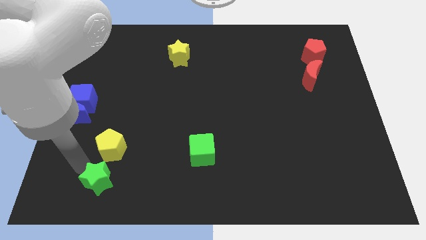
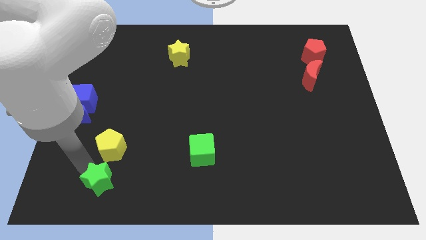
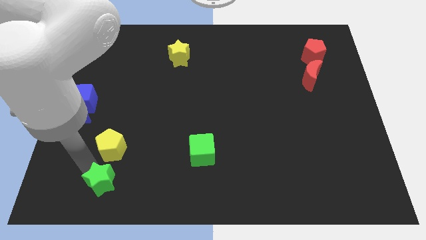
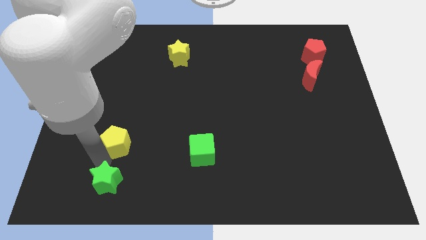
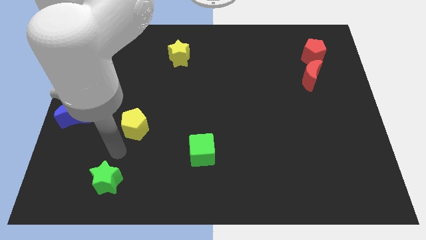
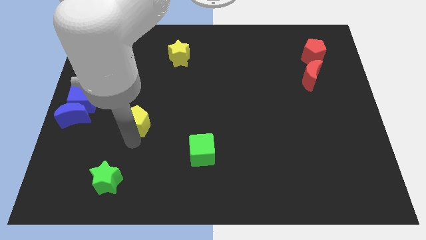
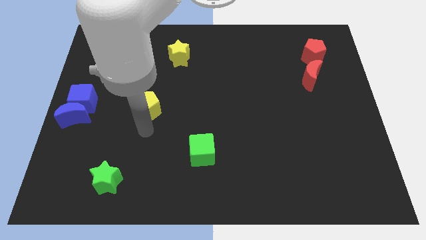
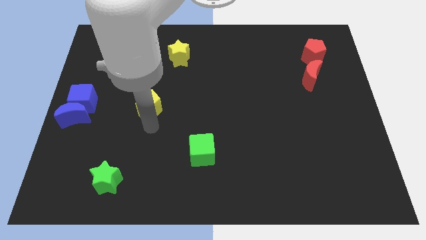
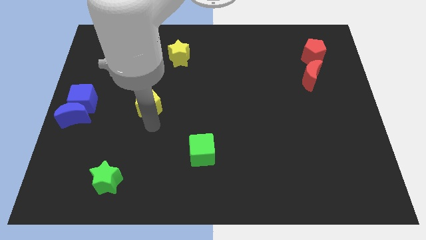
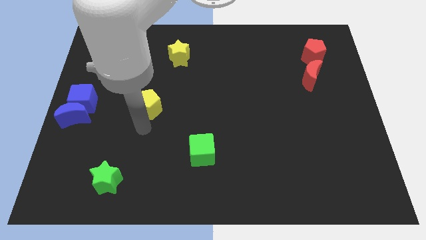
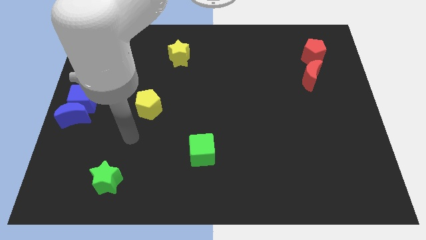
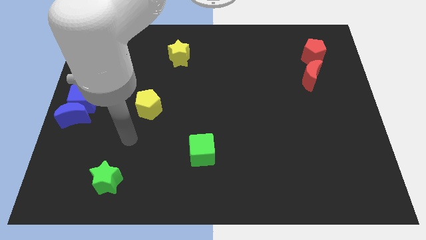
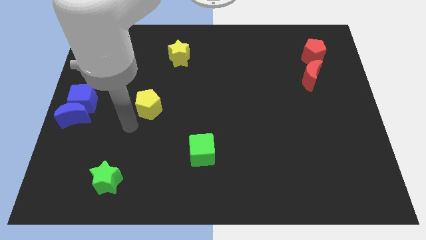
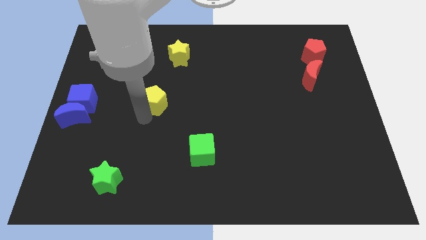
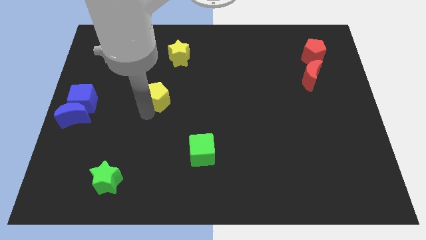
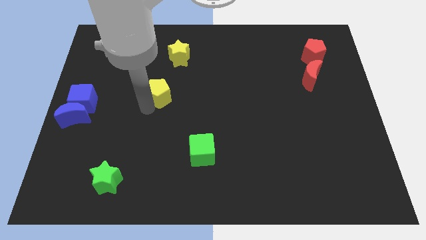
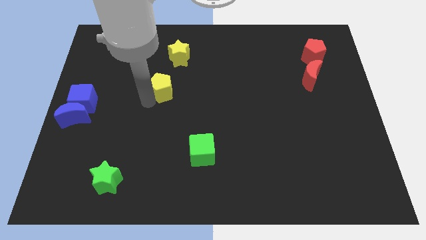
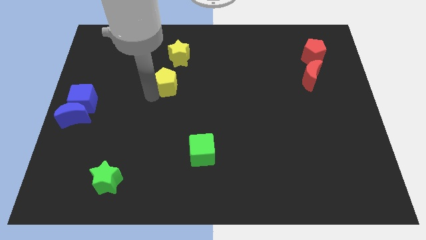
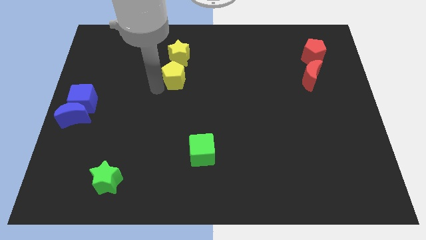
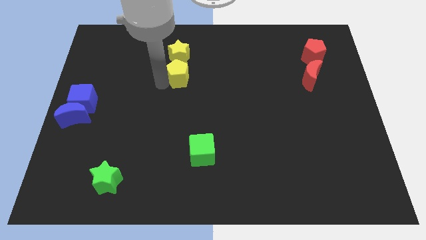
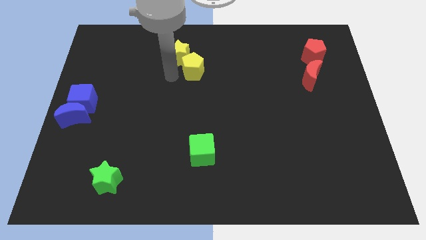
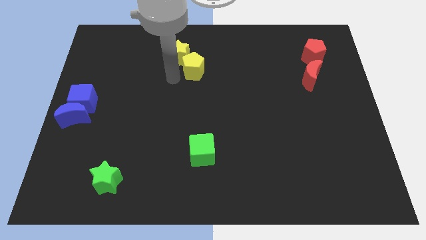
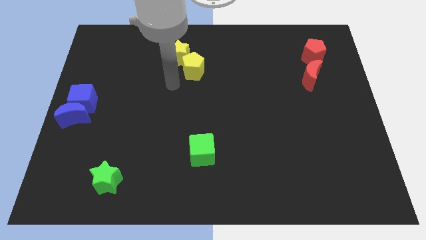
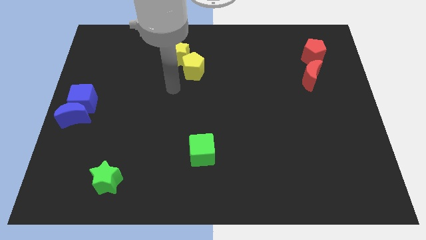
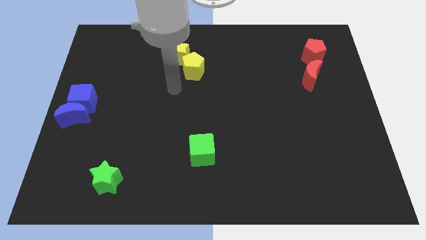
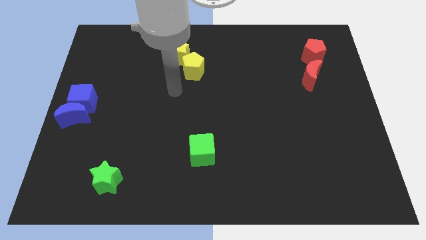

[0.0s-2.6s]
move yellow pentagon diagonally below yellow star

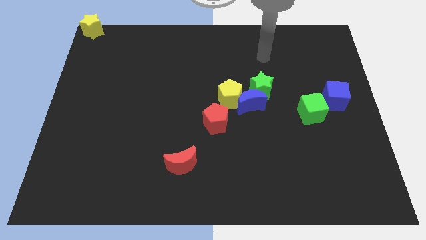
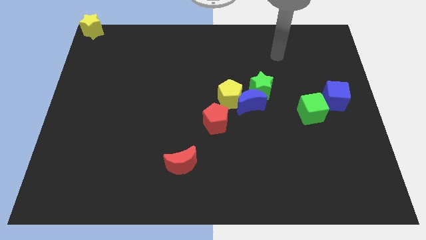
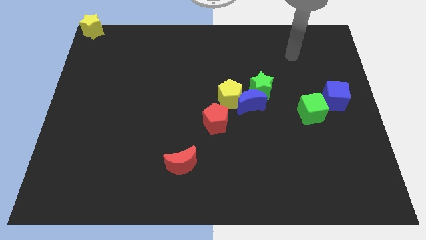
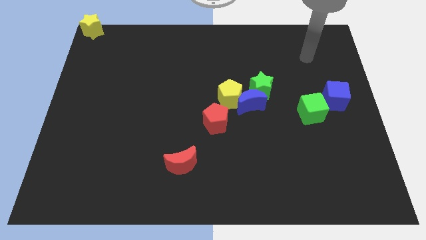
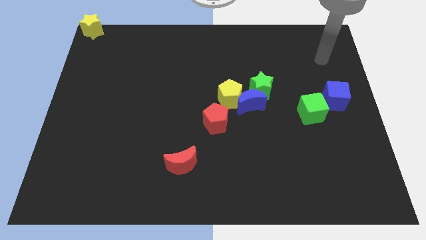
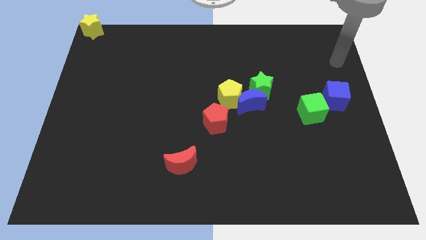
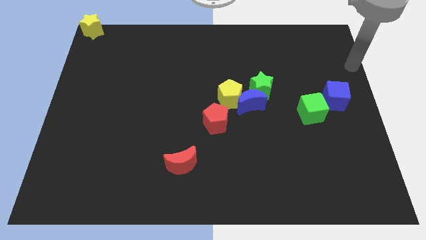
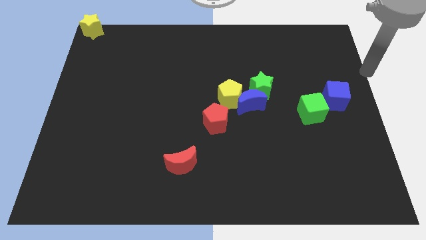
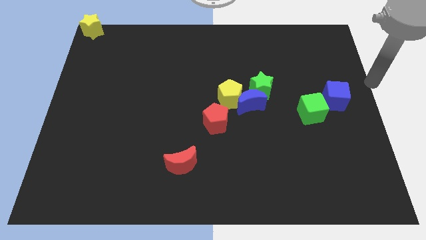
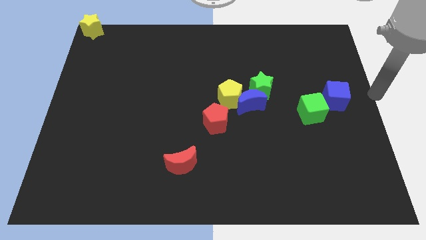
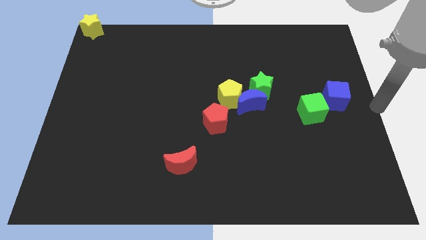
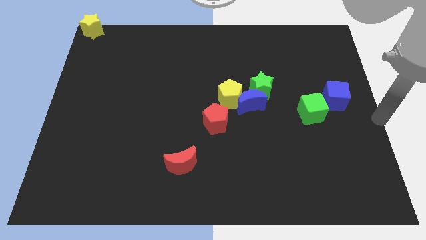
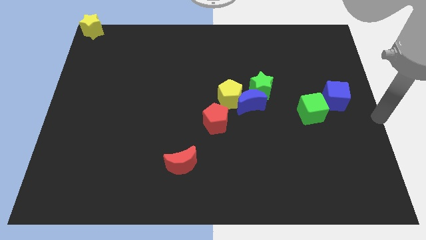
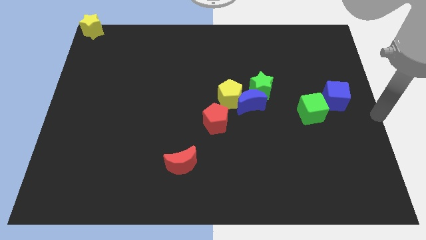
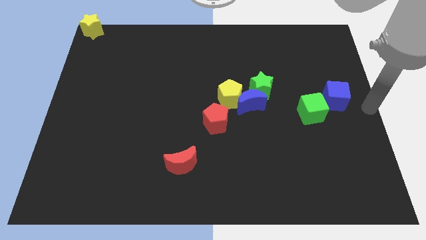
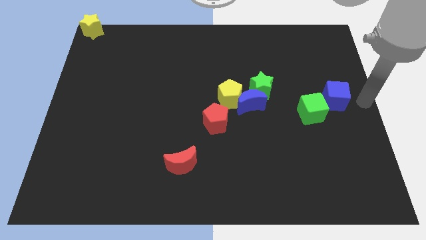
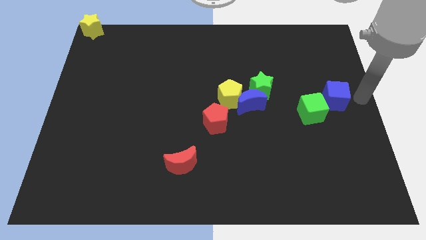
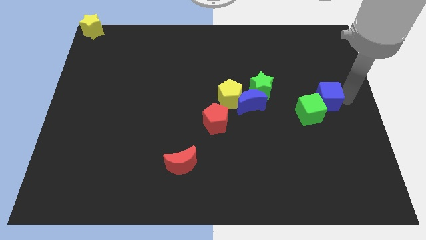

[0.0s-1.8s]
tap the blue cube on the right

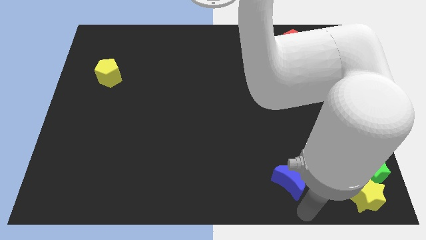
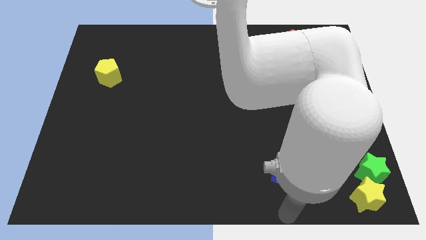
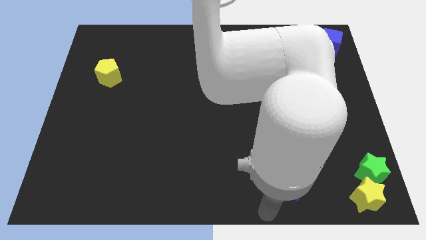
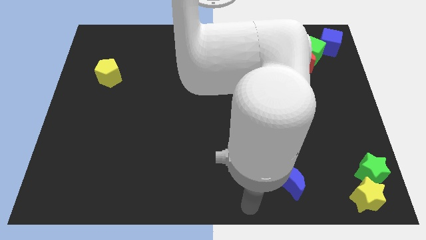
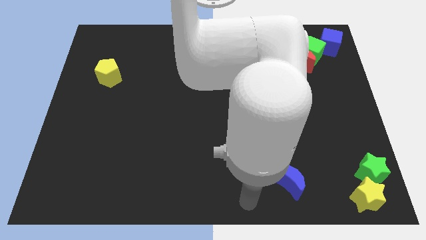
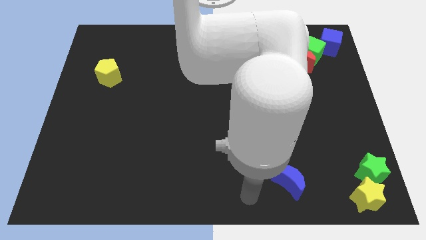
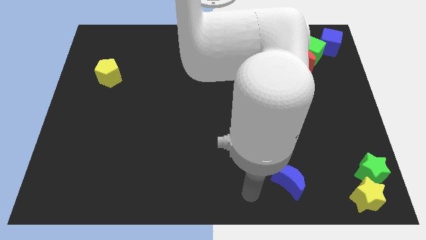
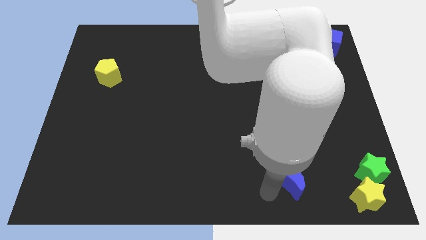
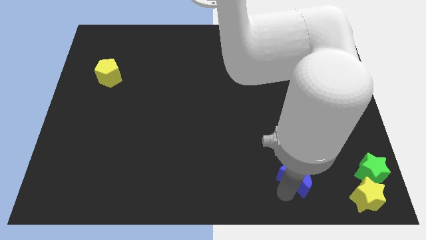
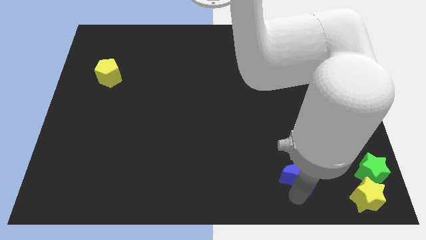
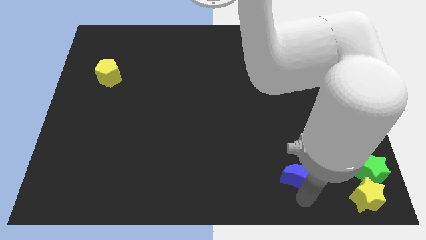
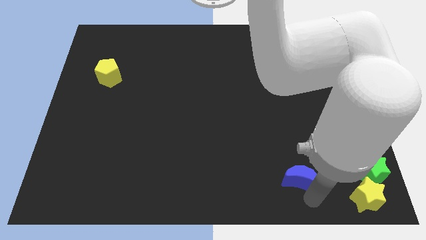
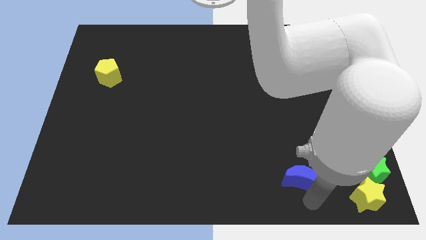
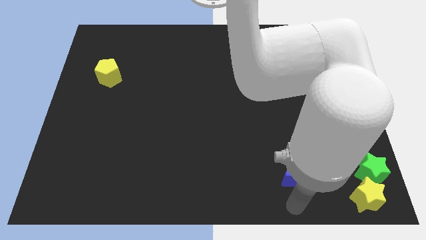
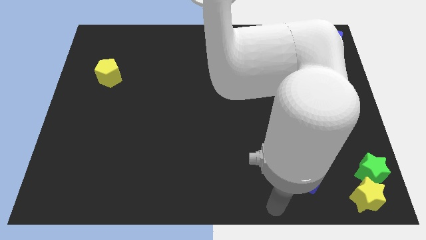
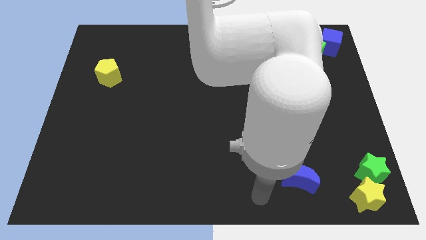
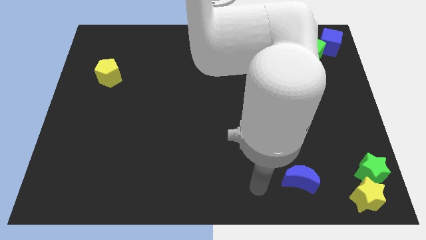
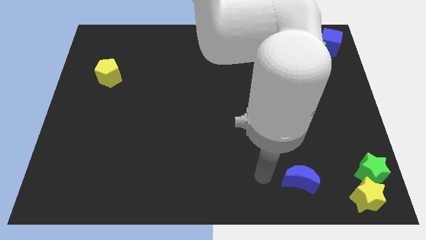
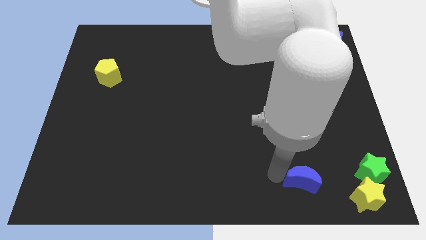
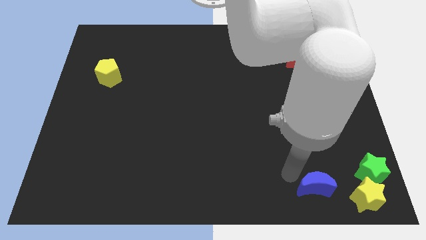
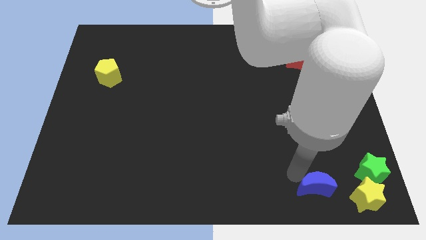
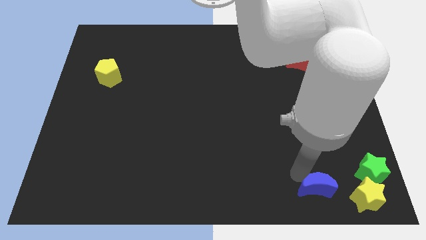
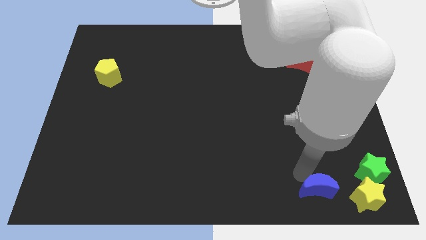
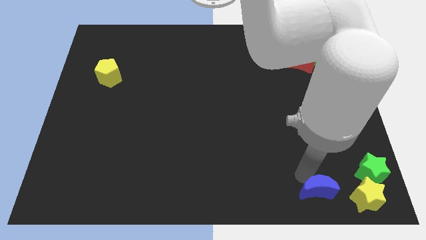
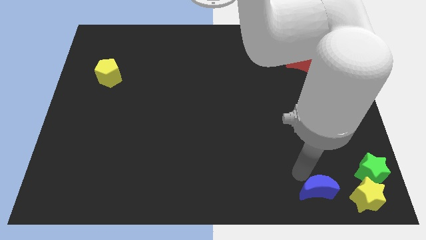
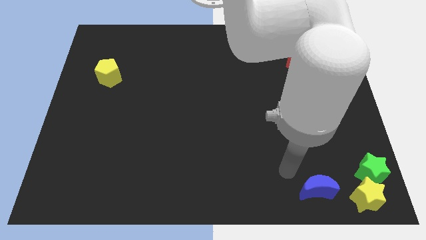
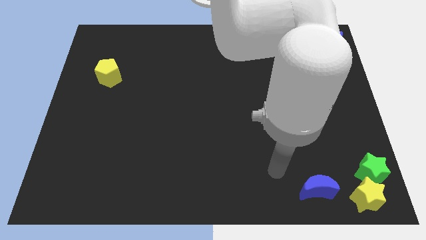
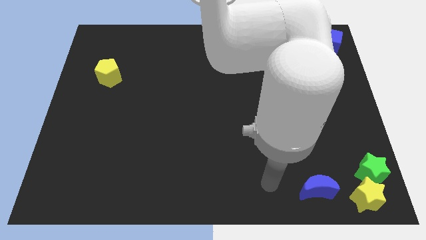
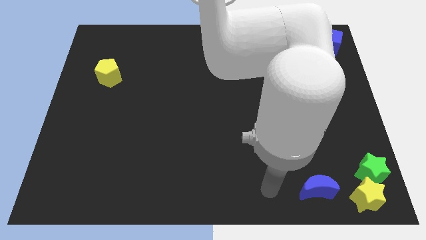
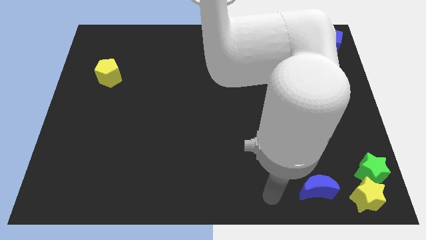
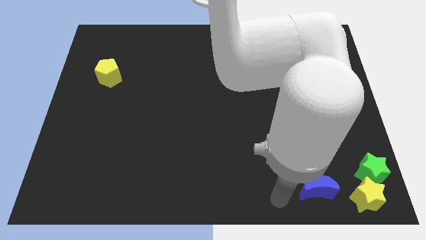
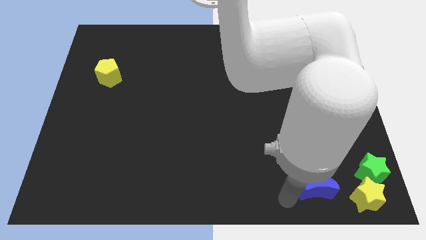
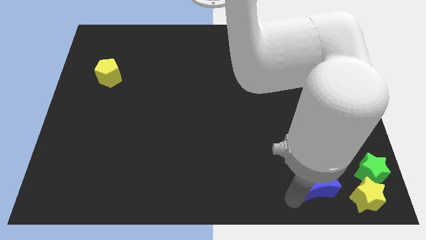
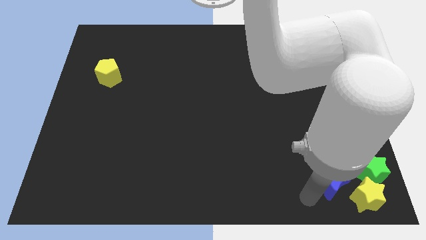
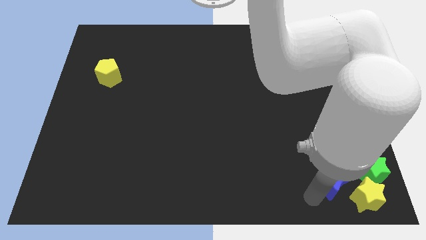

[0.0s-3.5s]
push the blue moon to the bottom right of the board

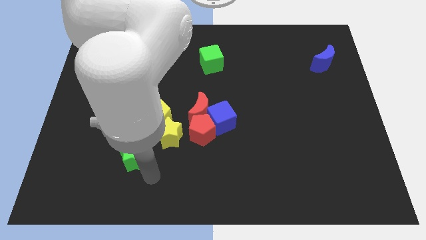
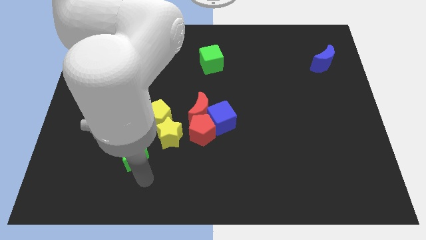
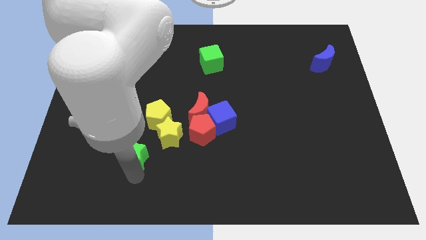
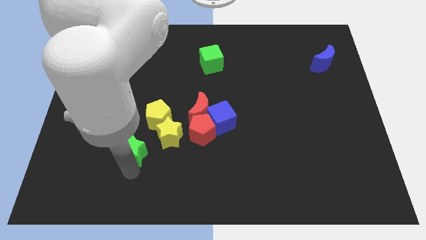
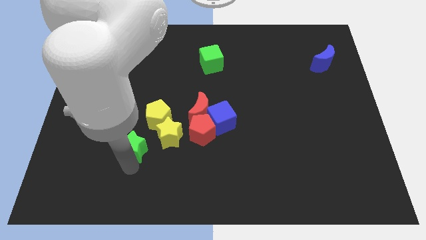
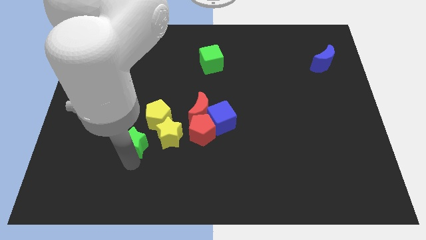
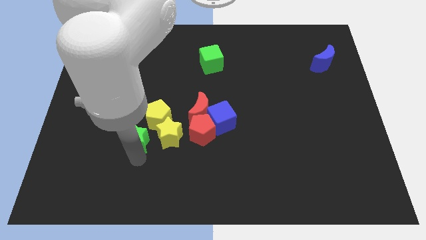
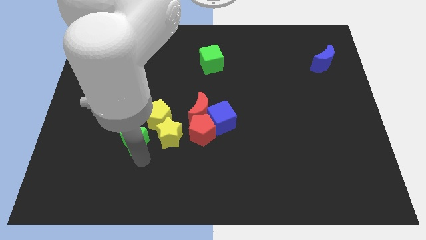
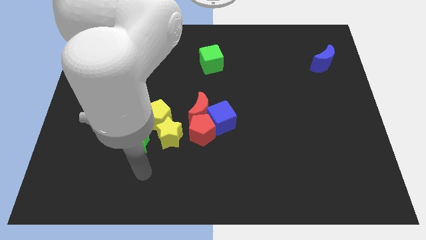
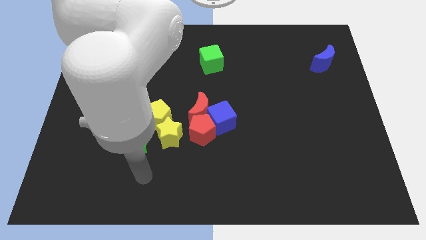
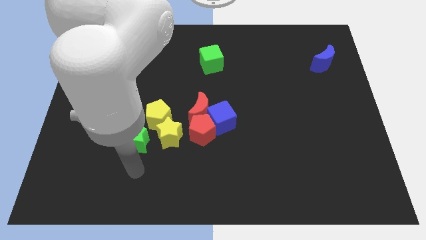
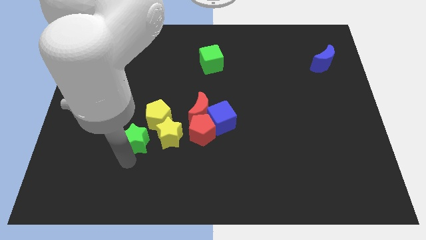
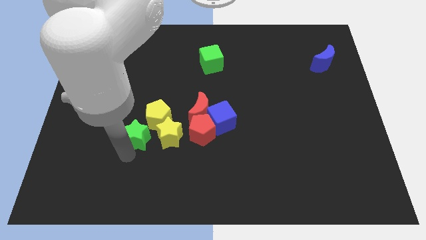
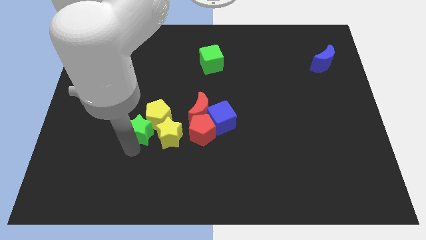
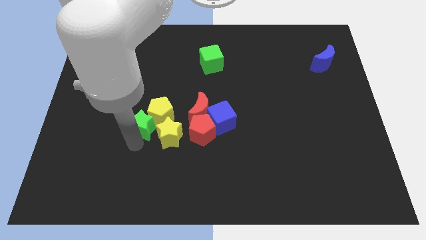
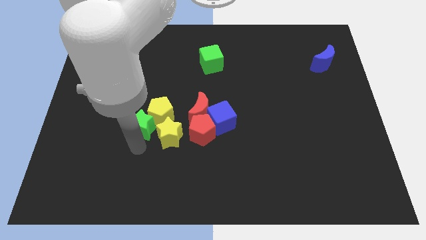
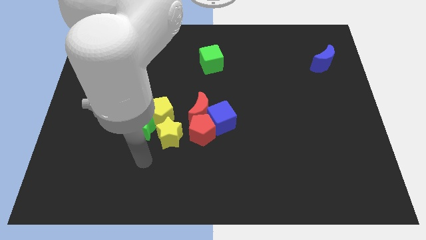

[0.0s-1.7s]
place the green star into yellow pentagon
